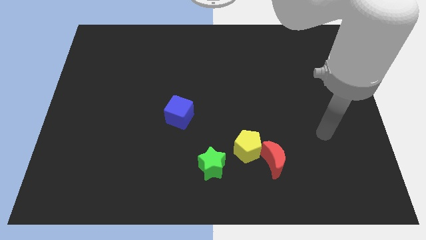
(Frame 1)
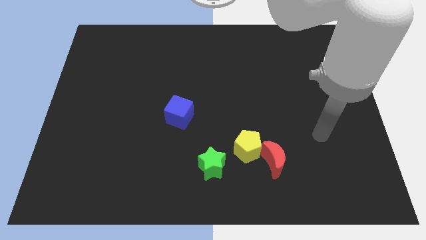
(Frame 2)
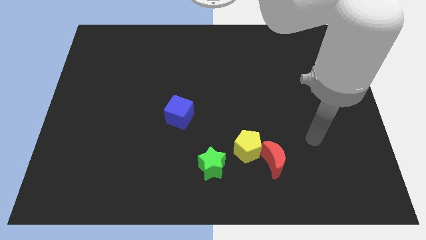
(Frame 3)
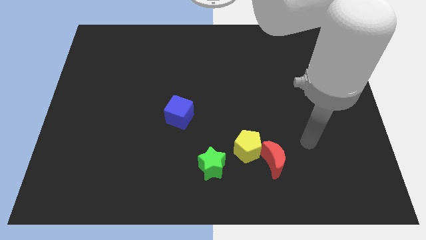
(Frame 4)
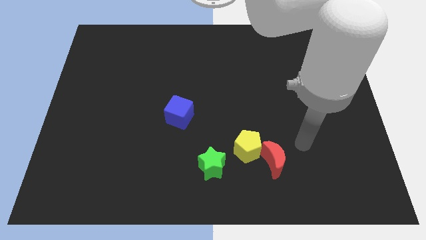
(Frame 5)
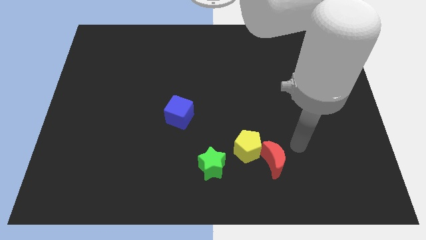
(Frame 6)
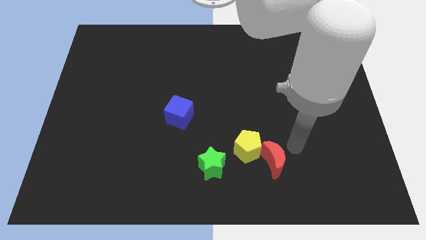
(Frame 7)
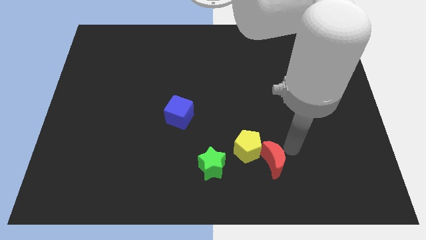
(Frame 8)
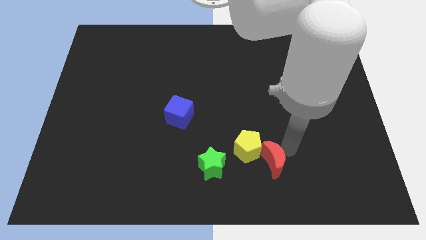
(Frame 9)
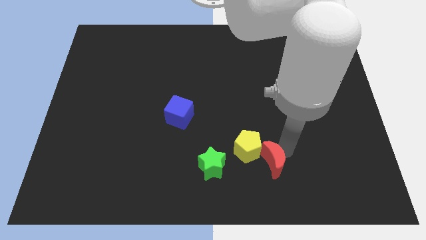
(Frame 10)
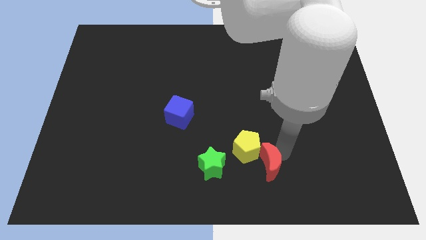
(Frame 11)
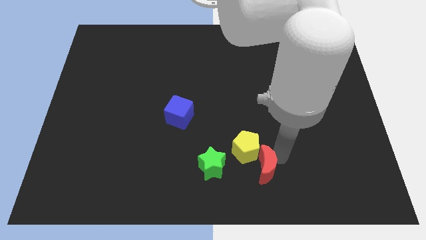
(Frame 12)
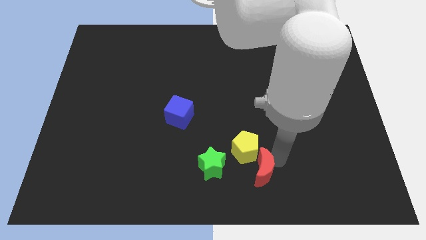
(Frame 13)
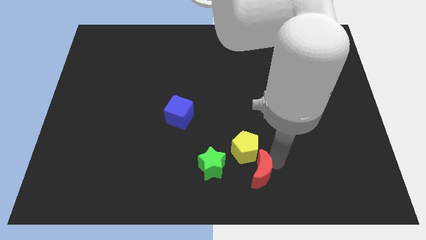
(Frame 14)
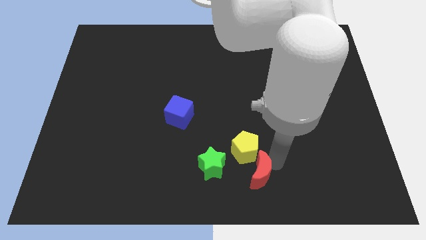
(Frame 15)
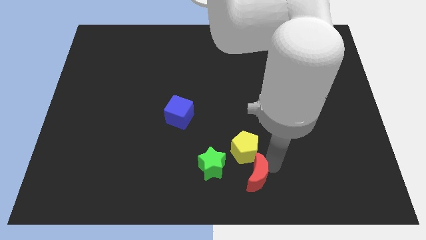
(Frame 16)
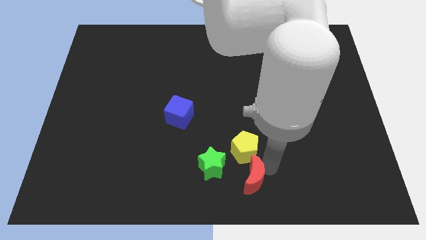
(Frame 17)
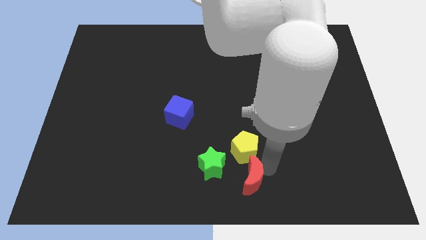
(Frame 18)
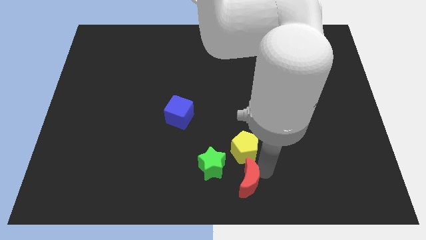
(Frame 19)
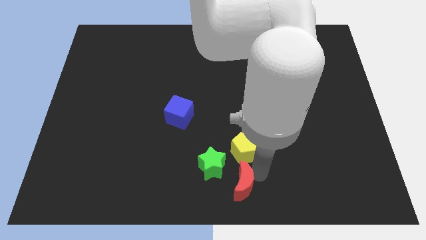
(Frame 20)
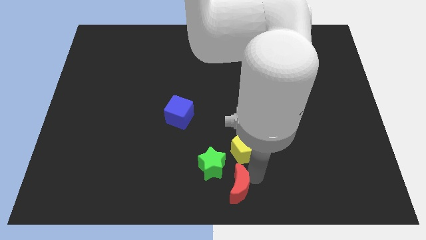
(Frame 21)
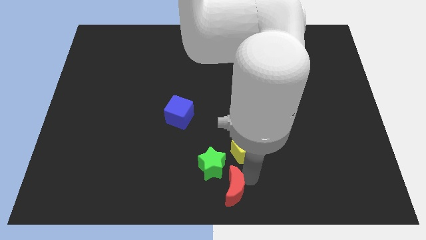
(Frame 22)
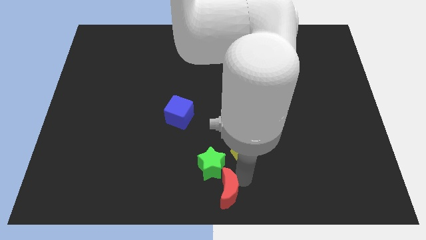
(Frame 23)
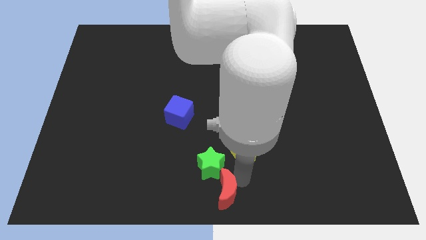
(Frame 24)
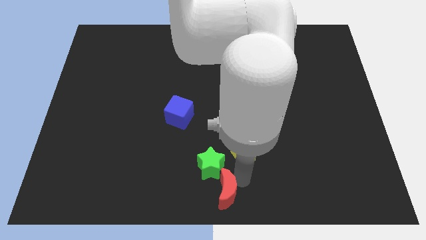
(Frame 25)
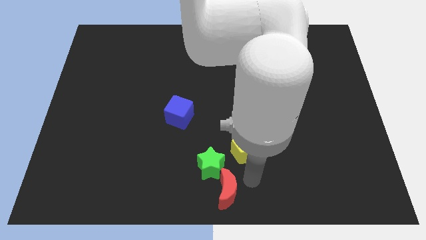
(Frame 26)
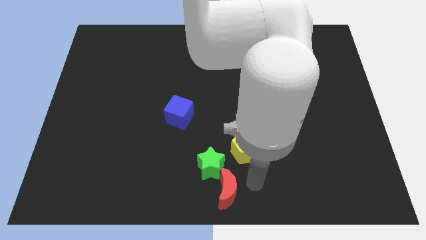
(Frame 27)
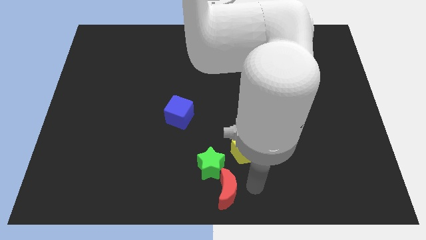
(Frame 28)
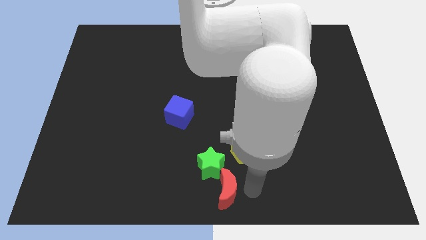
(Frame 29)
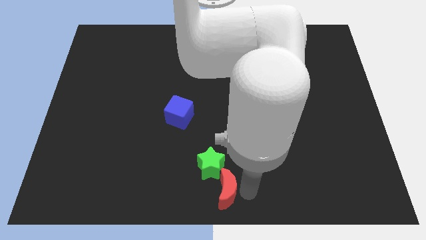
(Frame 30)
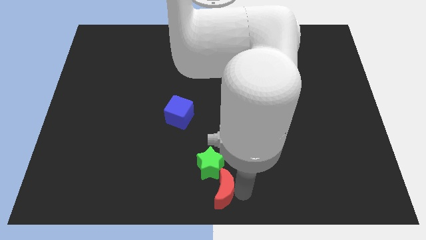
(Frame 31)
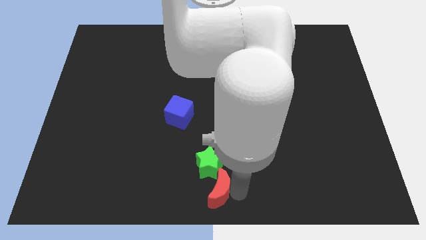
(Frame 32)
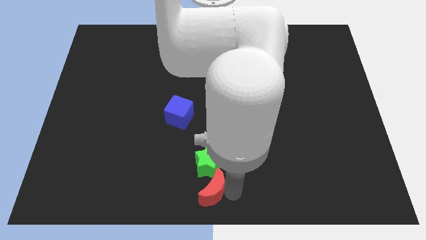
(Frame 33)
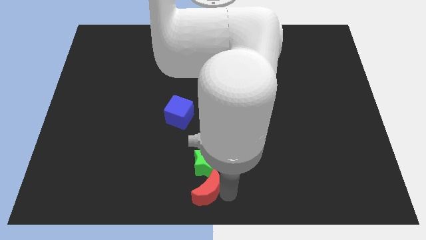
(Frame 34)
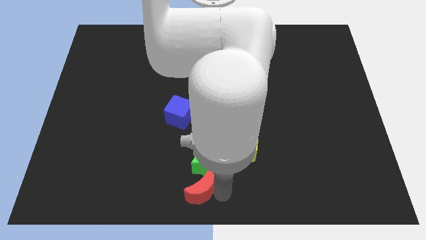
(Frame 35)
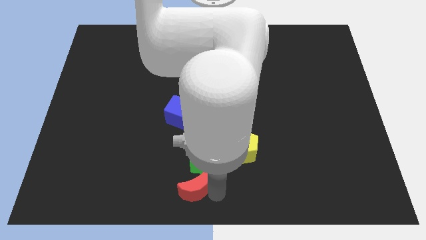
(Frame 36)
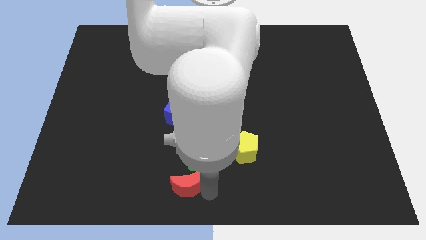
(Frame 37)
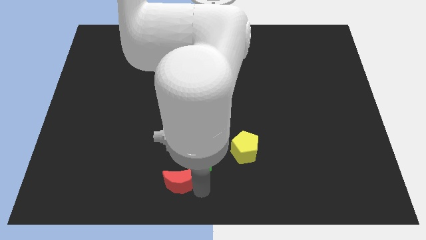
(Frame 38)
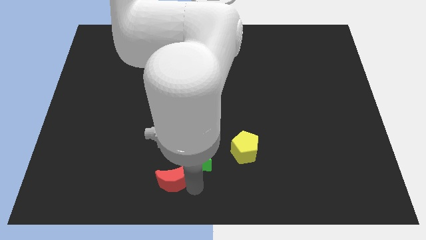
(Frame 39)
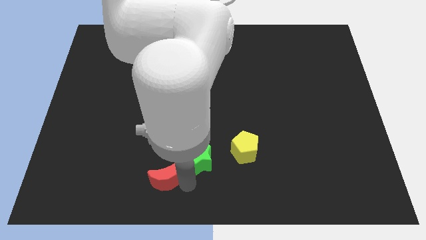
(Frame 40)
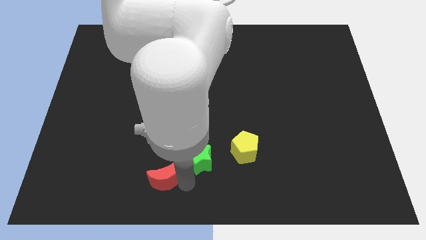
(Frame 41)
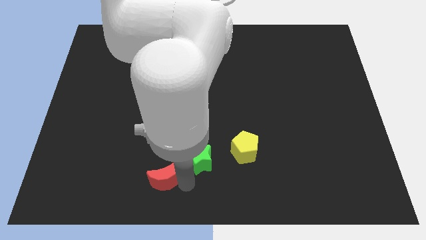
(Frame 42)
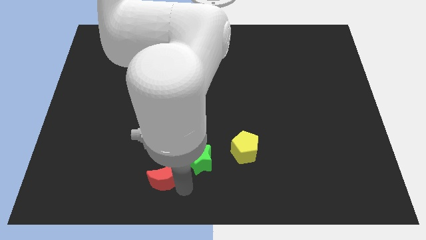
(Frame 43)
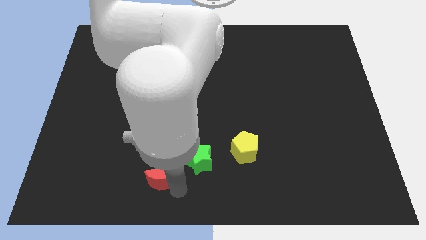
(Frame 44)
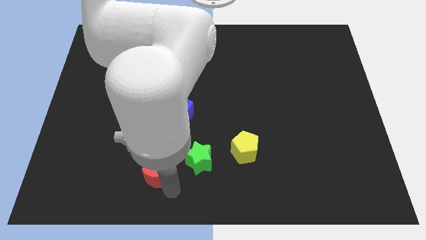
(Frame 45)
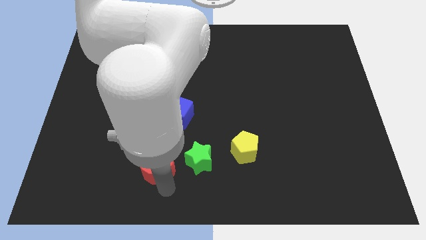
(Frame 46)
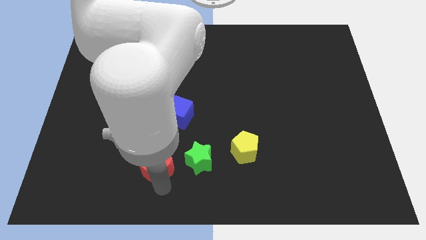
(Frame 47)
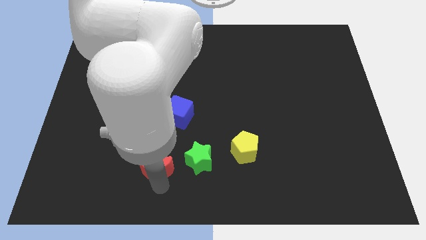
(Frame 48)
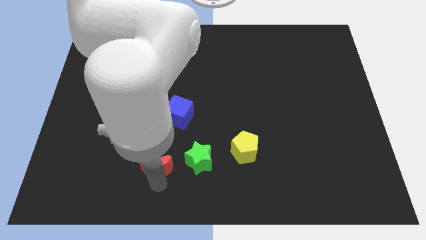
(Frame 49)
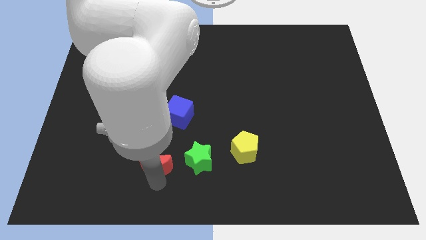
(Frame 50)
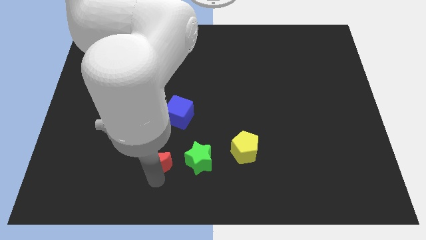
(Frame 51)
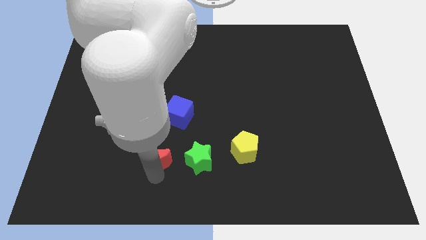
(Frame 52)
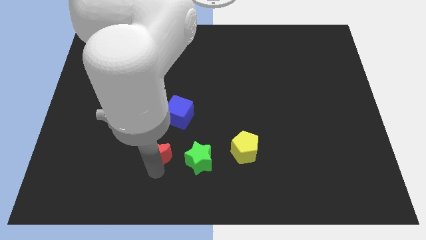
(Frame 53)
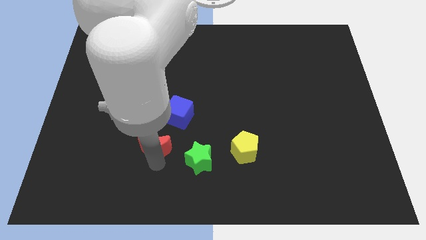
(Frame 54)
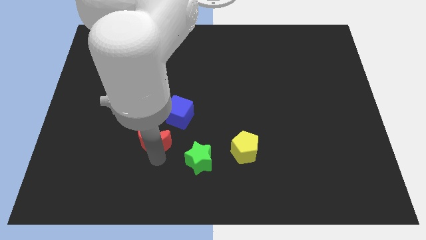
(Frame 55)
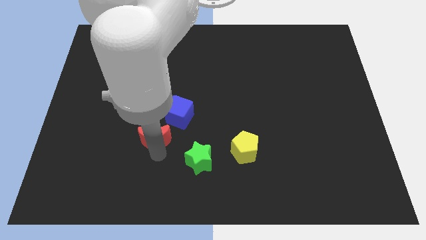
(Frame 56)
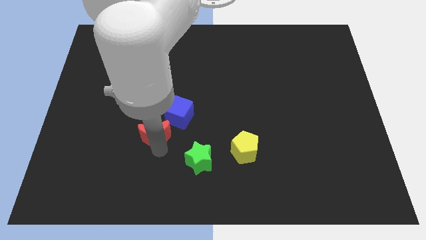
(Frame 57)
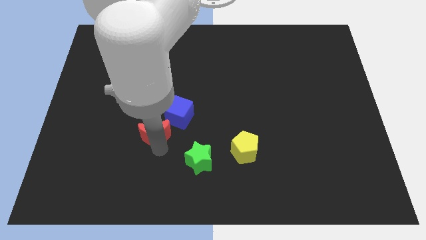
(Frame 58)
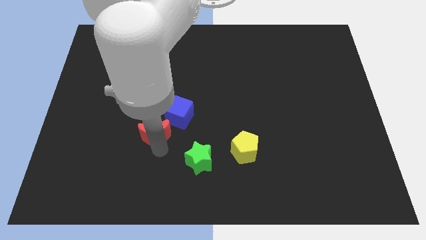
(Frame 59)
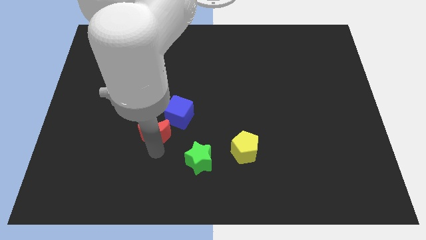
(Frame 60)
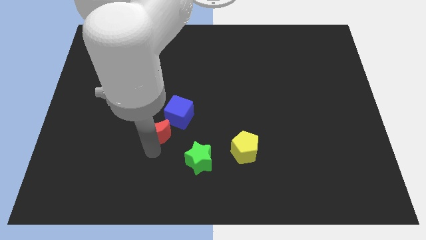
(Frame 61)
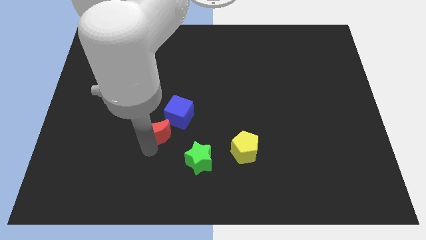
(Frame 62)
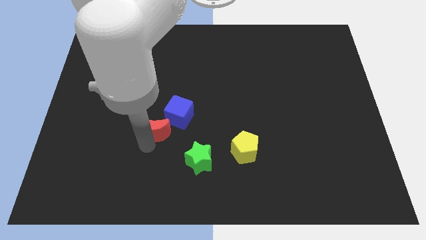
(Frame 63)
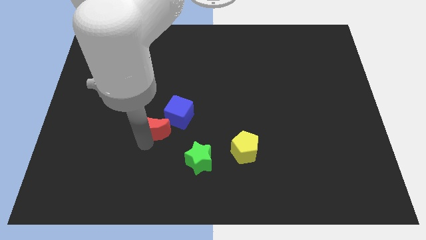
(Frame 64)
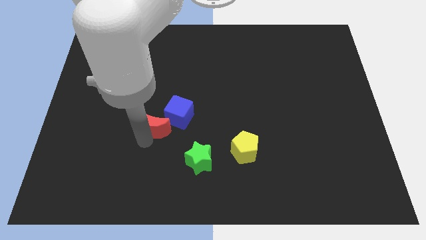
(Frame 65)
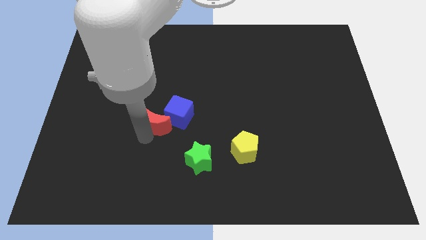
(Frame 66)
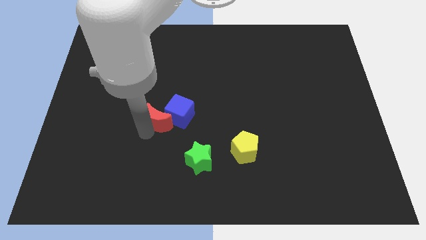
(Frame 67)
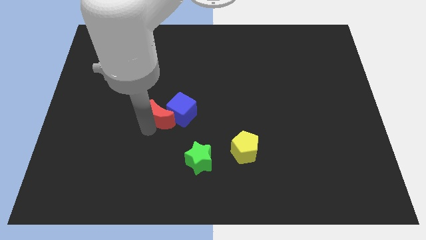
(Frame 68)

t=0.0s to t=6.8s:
push the moon close to the cube

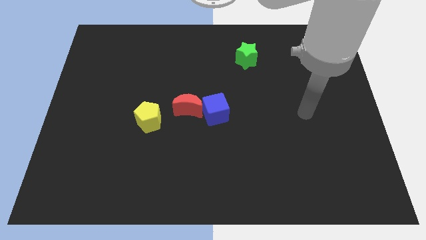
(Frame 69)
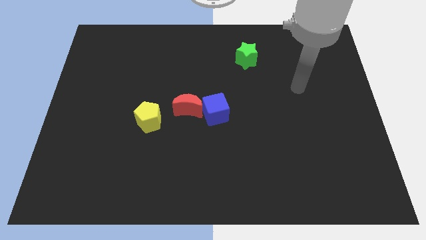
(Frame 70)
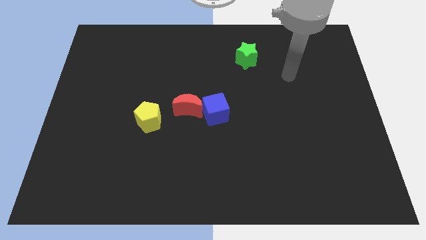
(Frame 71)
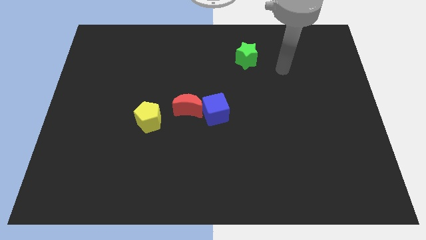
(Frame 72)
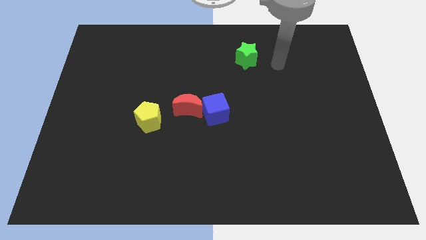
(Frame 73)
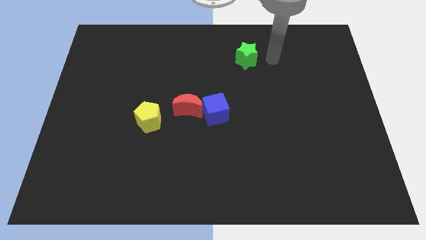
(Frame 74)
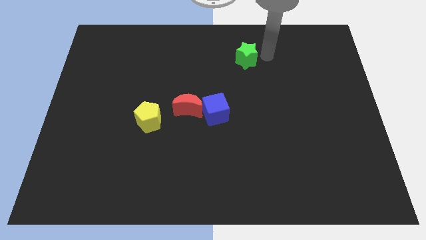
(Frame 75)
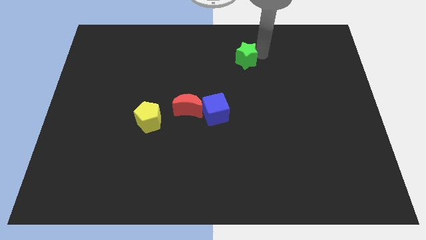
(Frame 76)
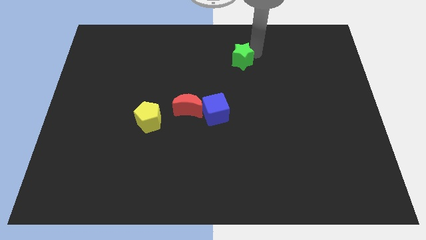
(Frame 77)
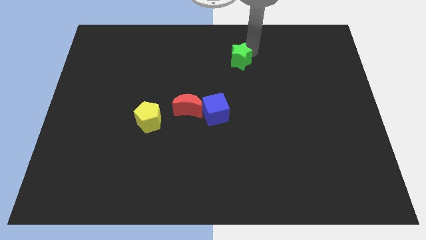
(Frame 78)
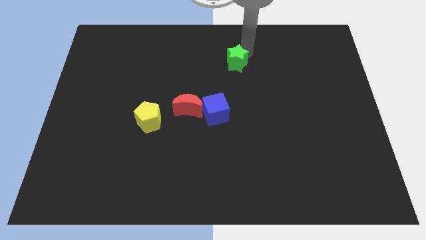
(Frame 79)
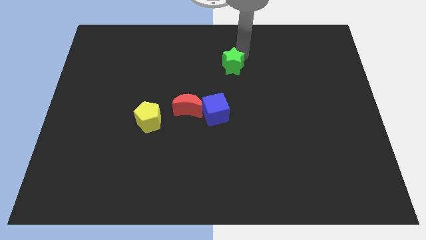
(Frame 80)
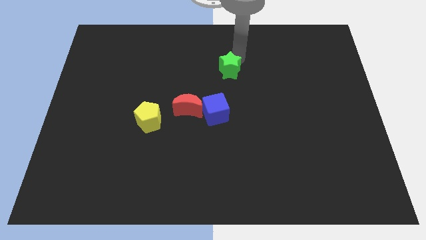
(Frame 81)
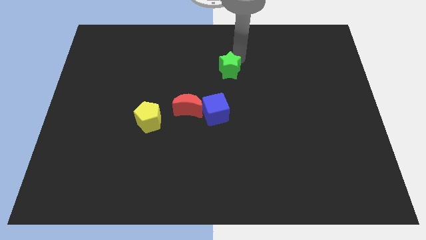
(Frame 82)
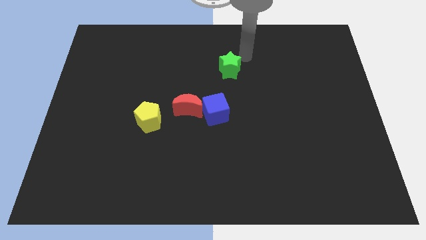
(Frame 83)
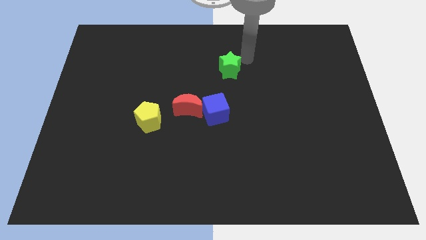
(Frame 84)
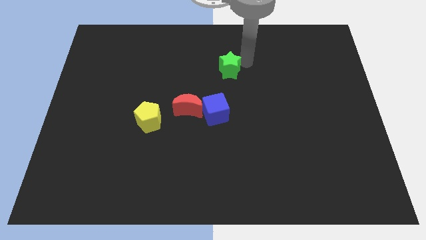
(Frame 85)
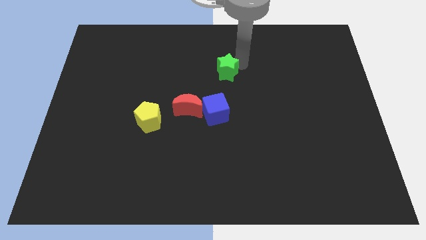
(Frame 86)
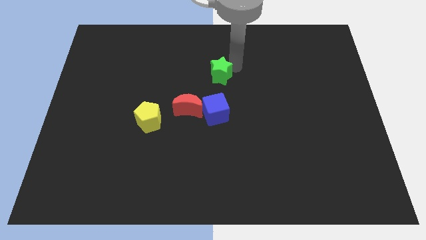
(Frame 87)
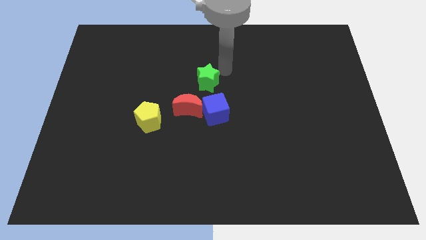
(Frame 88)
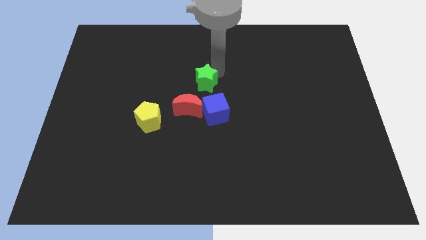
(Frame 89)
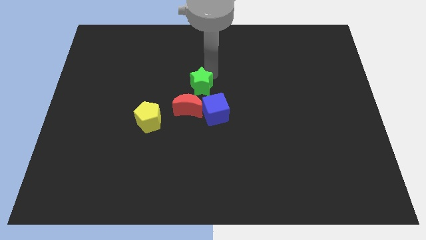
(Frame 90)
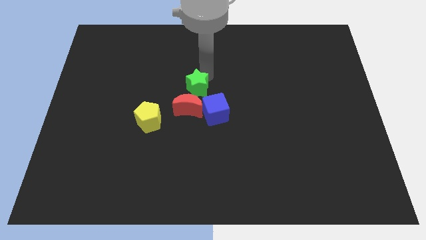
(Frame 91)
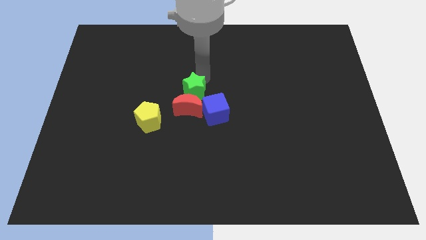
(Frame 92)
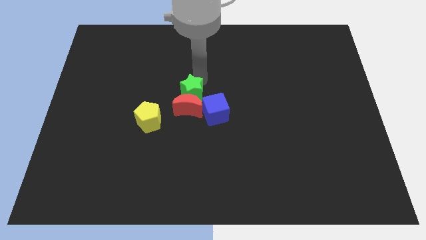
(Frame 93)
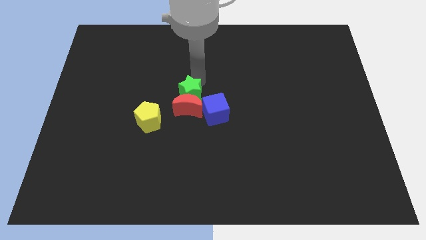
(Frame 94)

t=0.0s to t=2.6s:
move the star towards the red block
